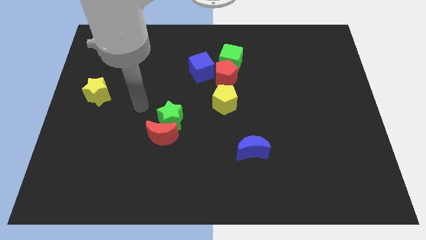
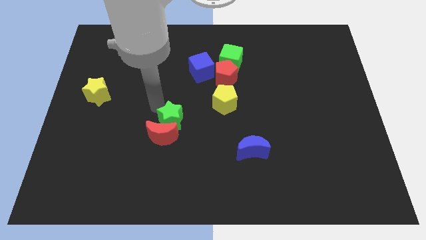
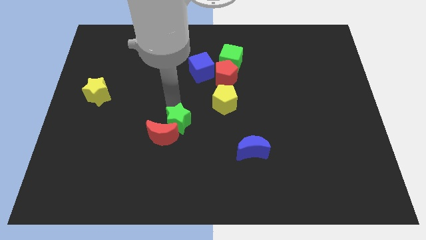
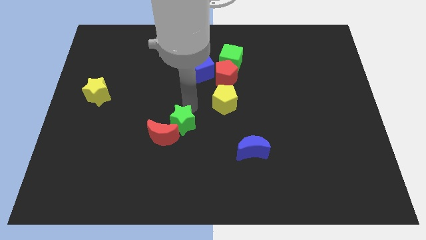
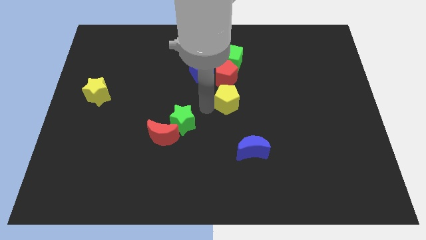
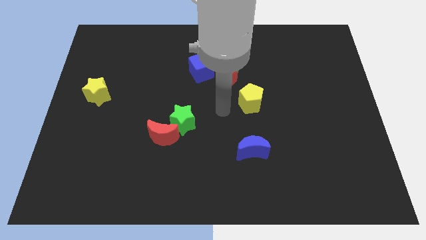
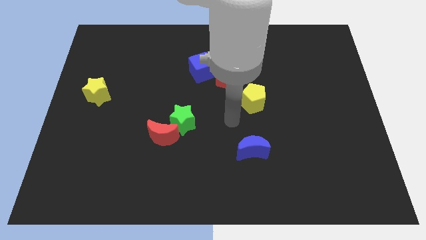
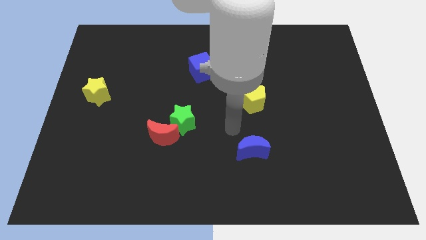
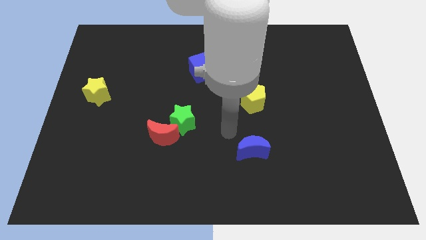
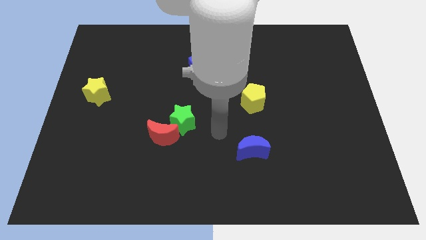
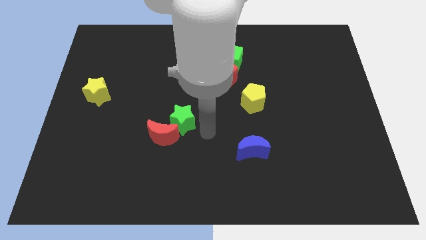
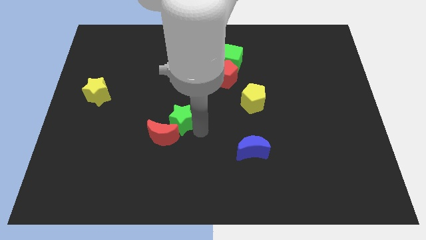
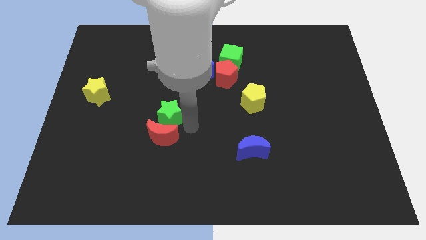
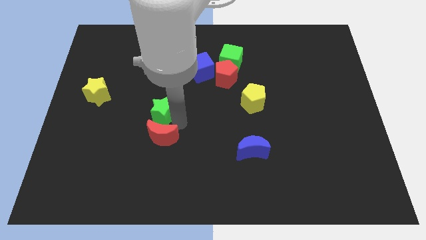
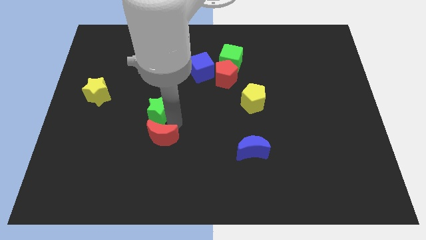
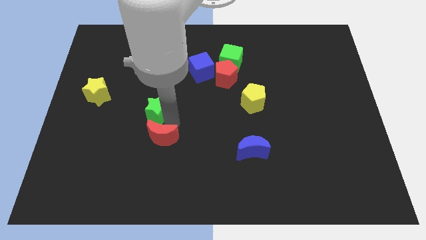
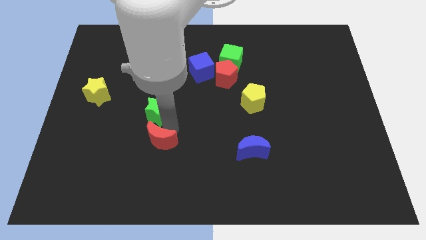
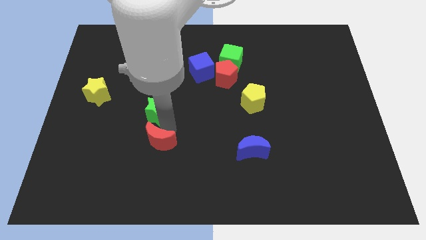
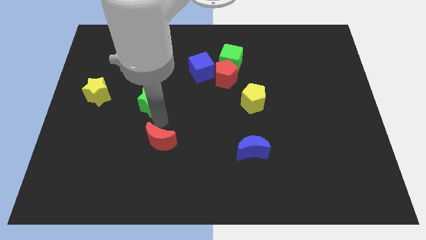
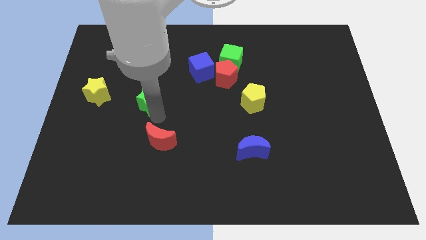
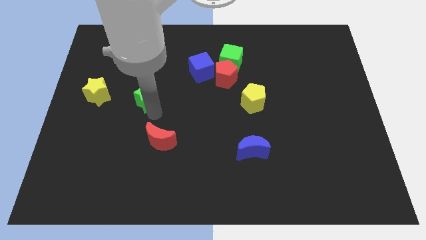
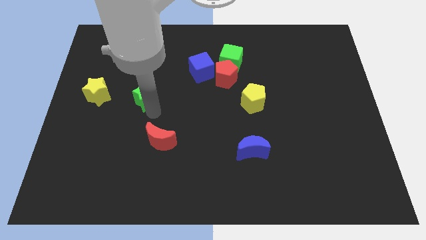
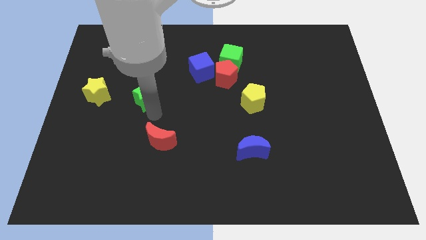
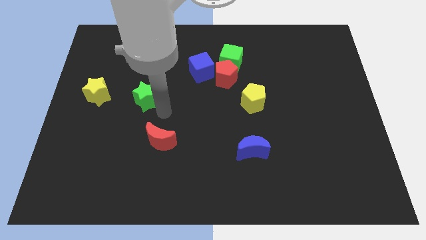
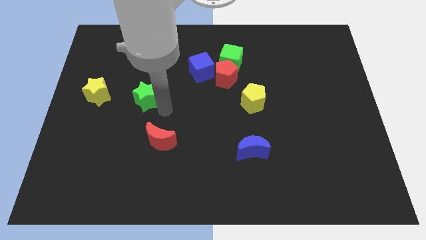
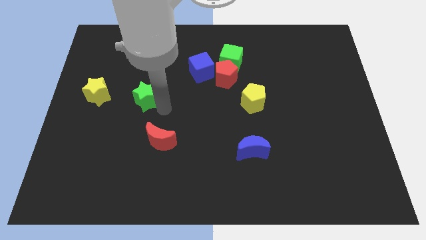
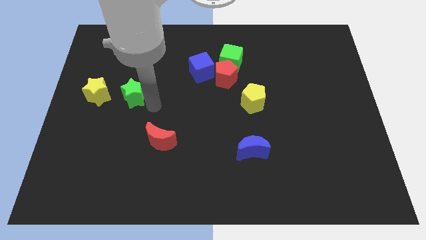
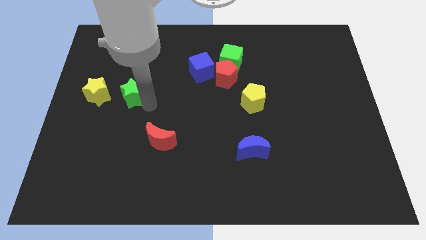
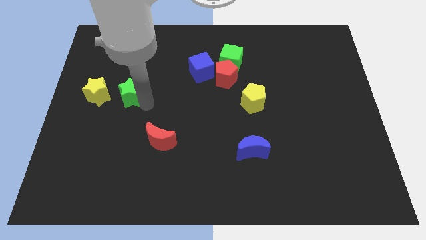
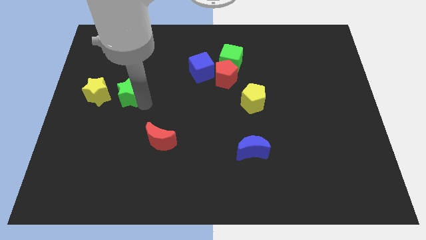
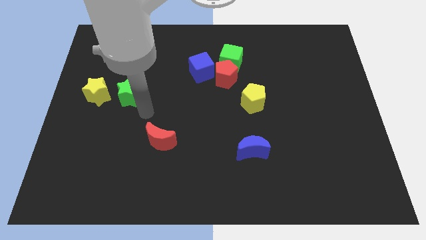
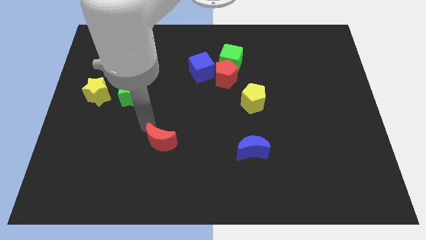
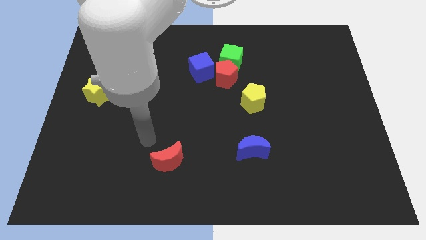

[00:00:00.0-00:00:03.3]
move green star towards yellow star

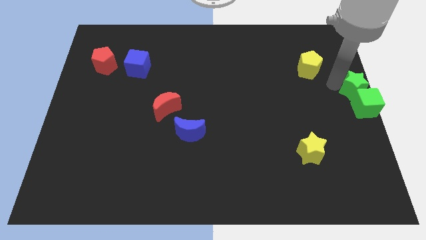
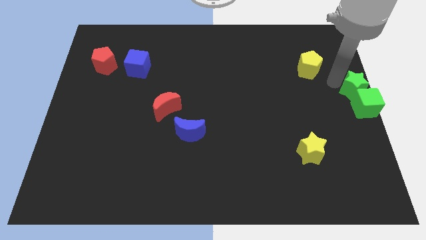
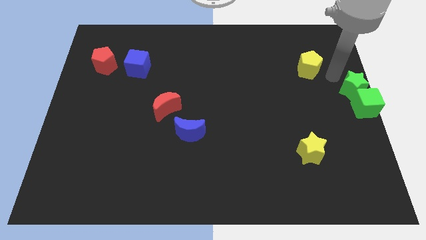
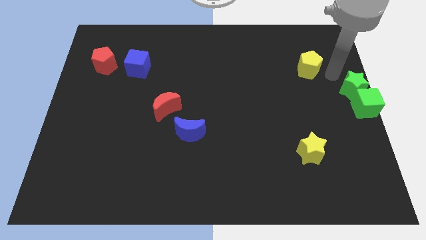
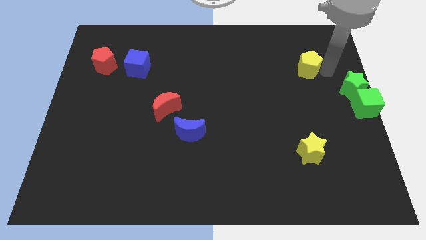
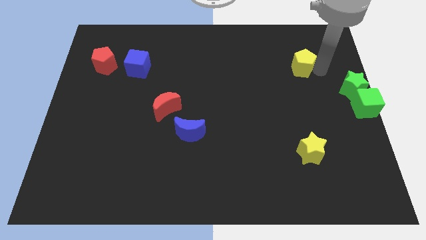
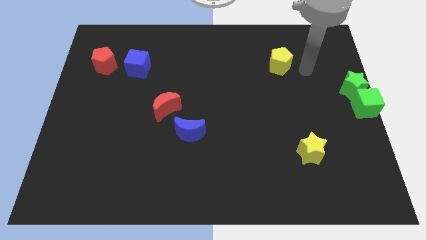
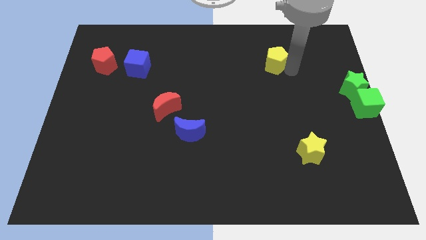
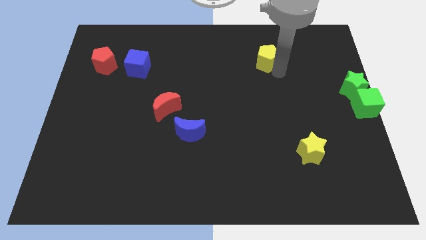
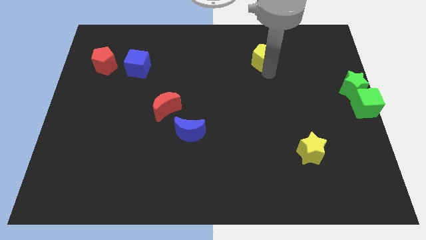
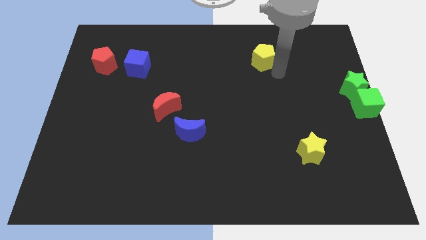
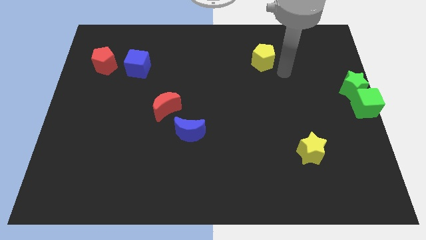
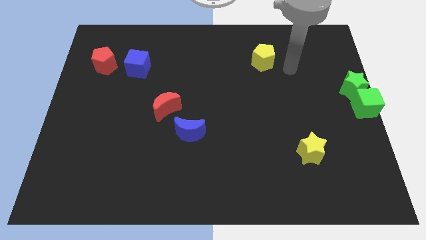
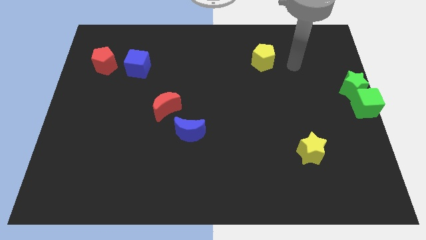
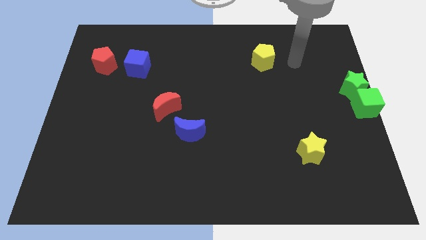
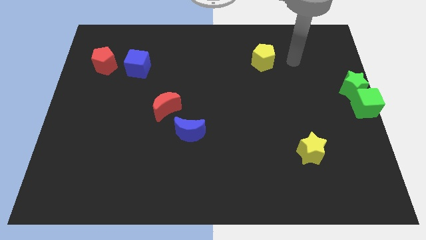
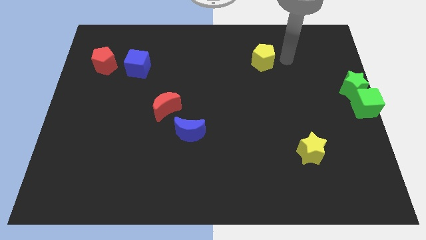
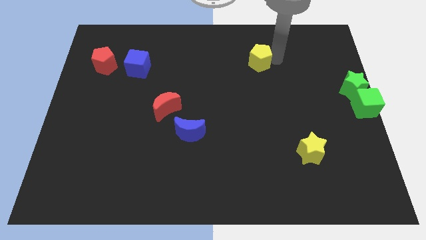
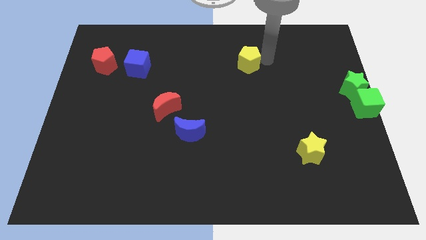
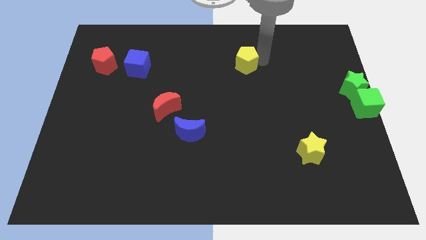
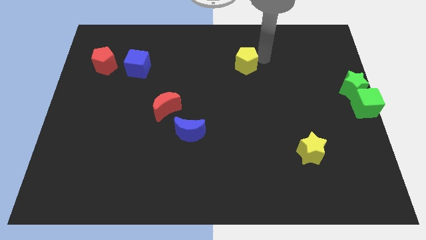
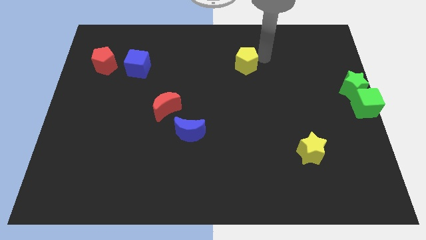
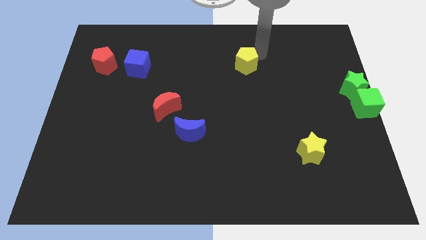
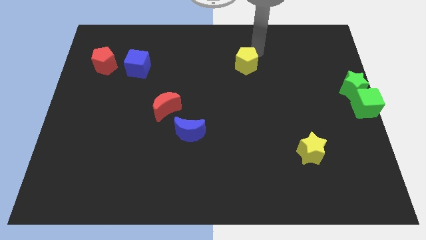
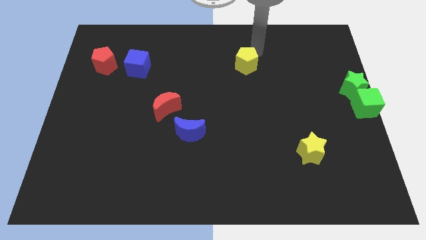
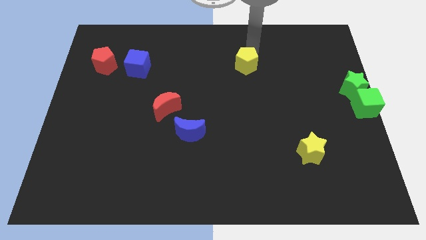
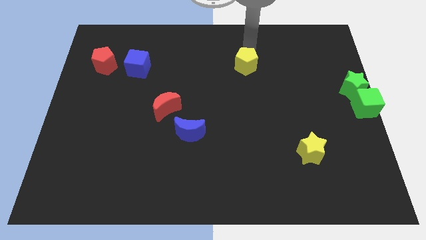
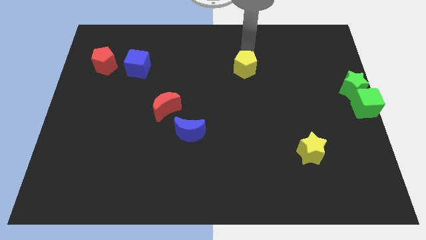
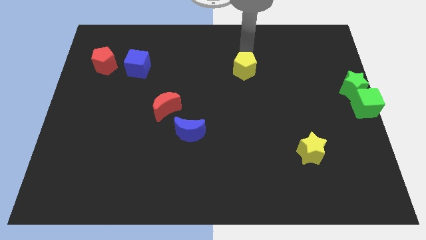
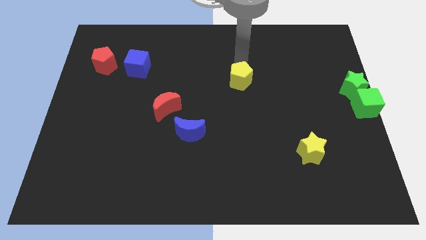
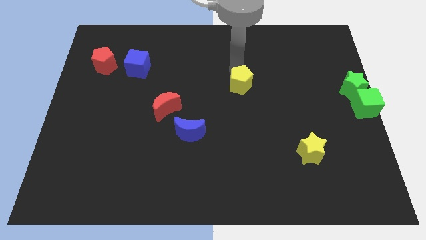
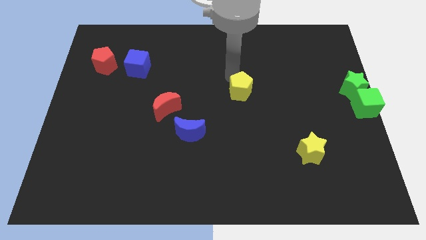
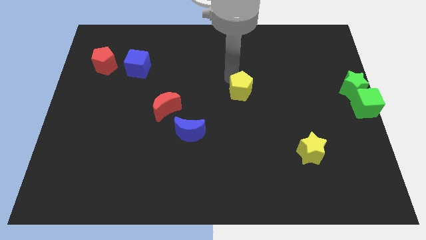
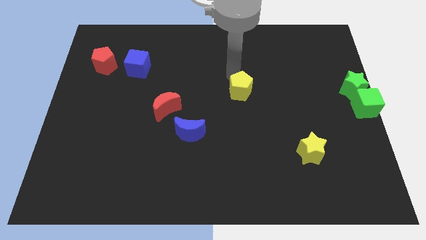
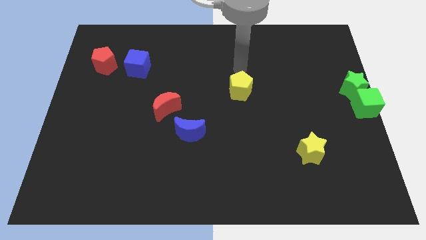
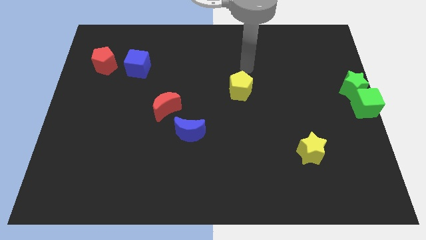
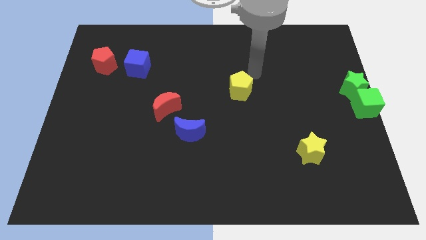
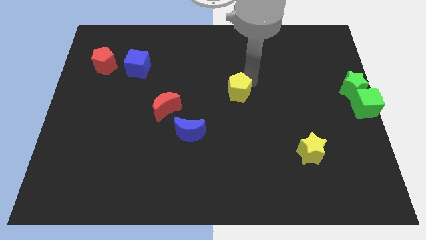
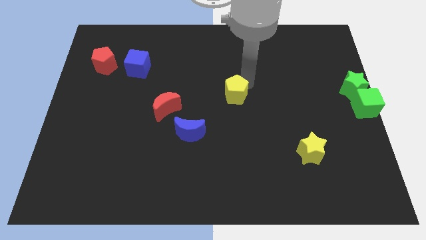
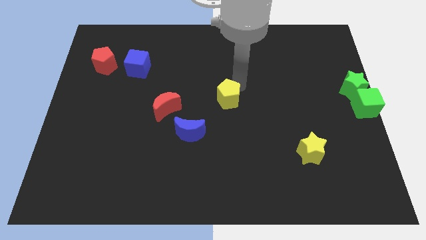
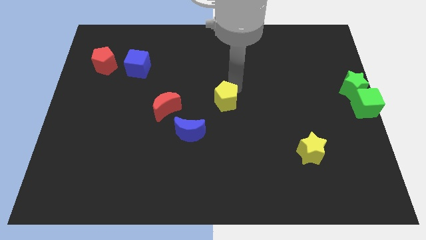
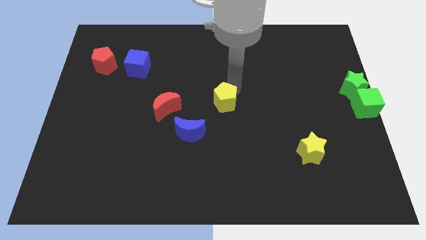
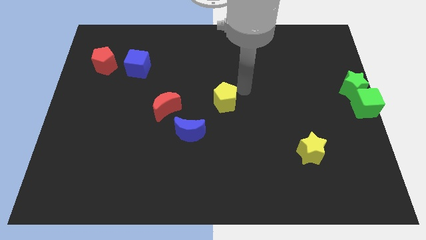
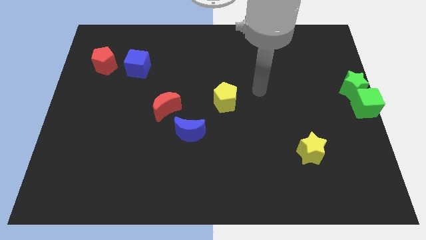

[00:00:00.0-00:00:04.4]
make a triangle with the yellow pentagon and another two crescents

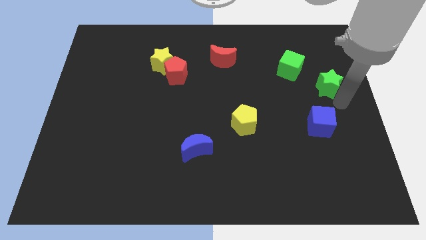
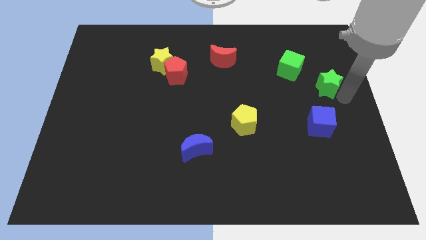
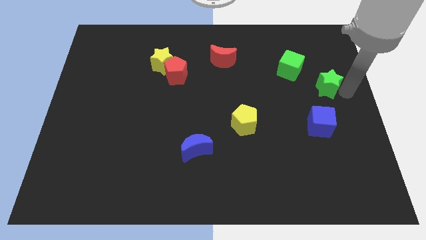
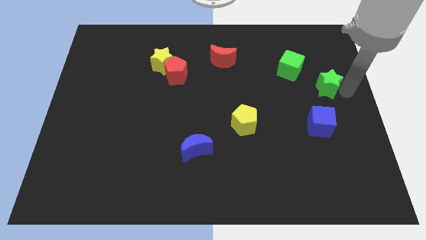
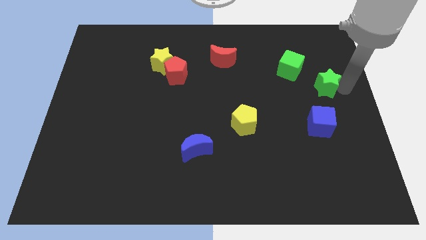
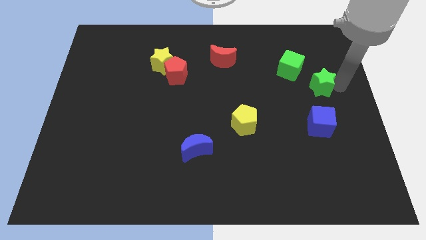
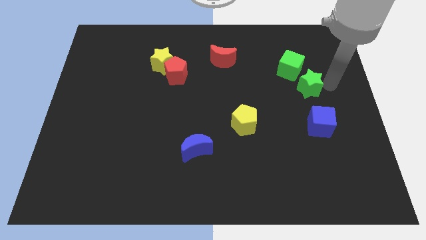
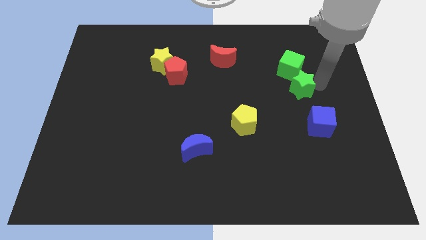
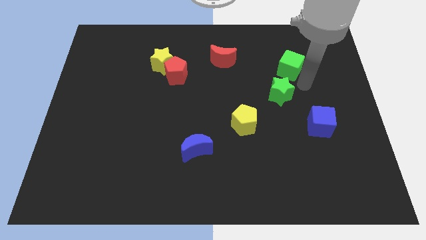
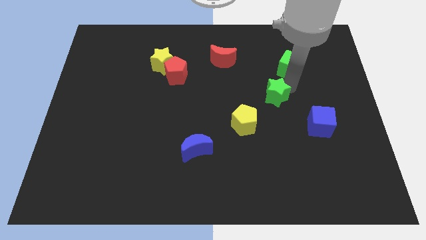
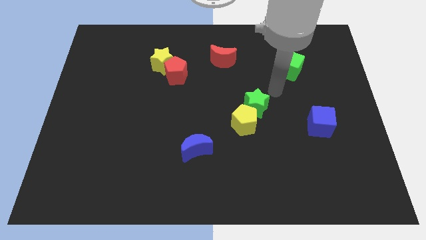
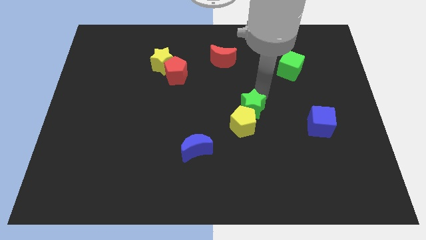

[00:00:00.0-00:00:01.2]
move the green star close to the yellow pentagon
